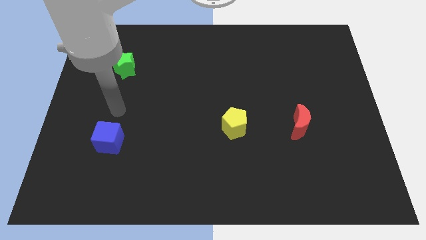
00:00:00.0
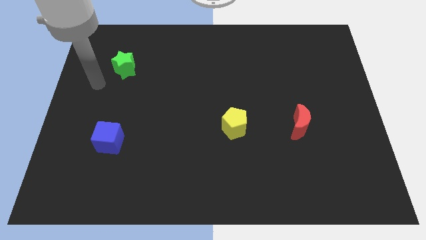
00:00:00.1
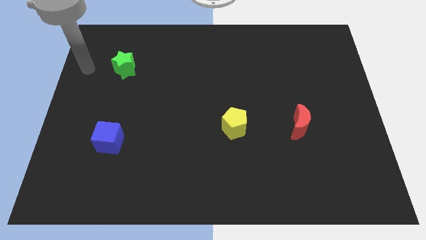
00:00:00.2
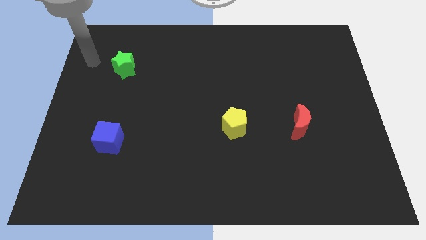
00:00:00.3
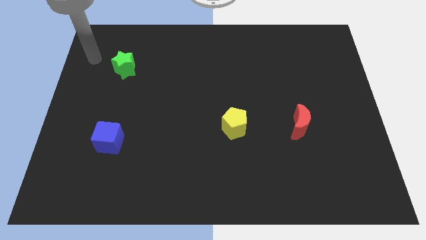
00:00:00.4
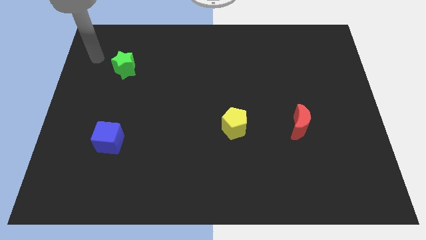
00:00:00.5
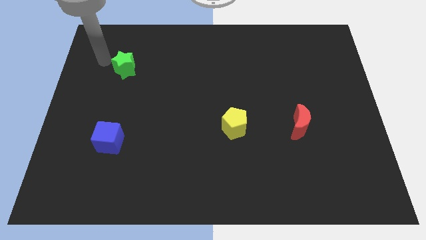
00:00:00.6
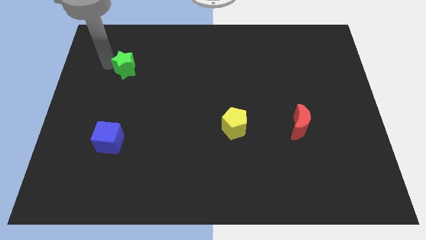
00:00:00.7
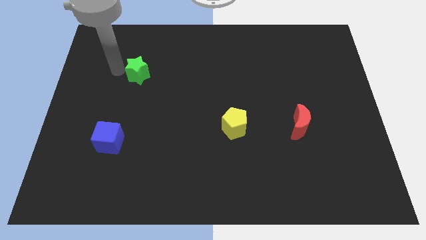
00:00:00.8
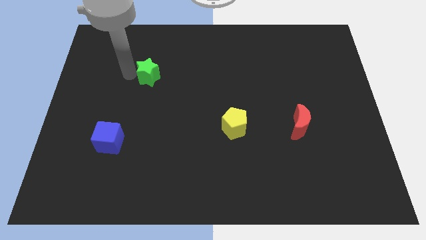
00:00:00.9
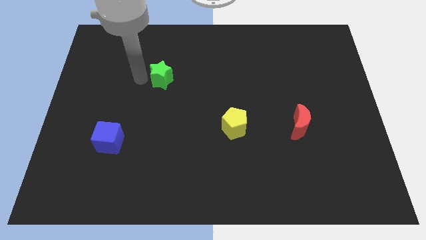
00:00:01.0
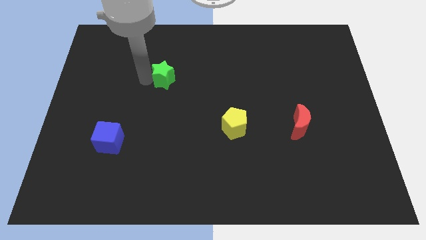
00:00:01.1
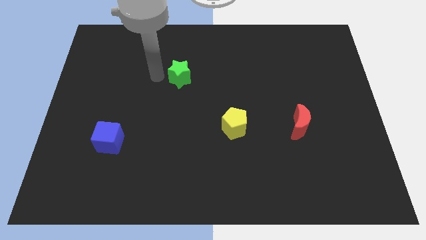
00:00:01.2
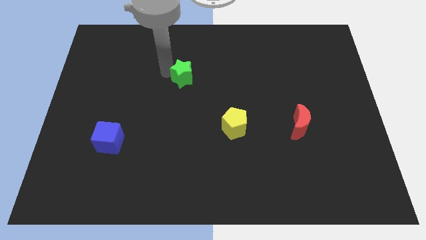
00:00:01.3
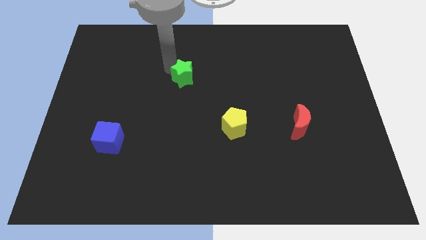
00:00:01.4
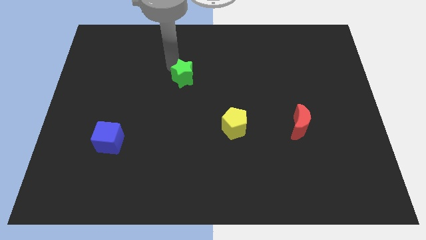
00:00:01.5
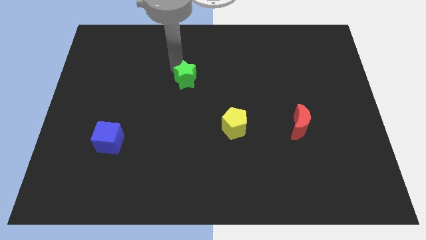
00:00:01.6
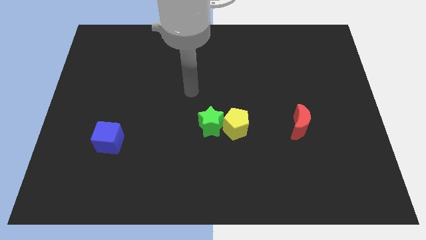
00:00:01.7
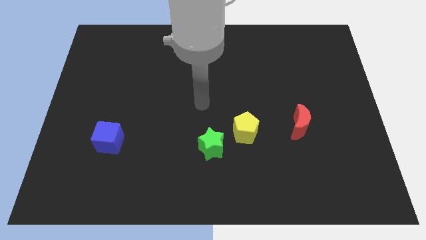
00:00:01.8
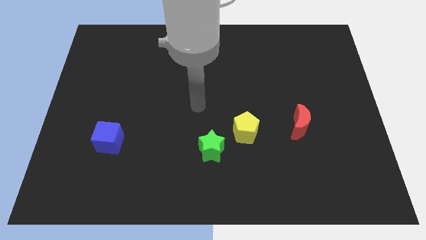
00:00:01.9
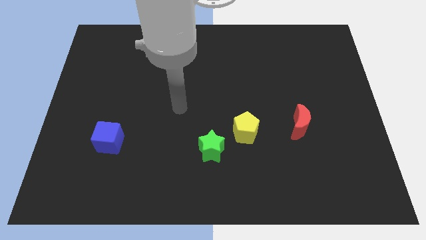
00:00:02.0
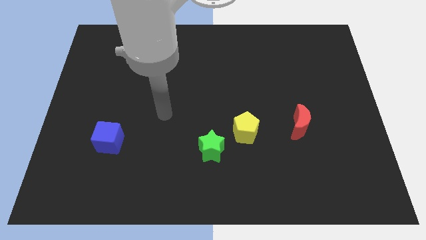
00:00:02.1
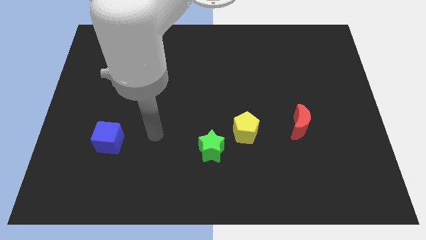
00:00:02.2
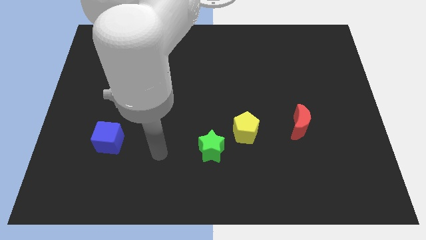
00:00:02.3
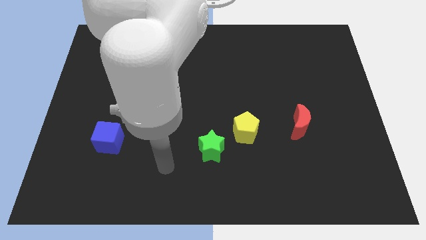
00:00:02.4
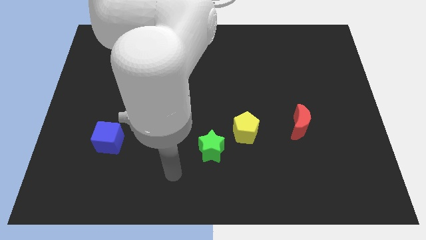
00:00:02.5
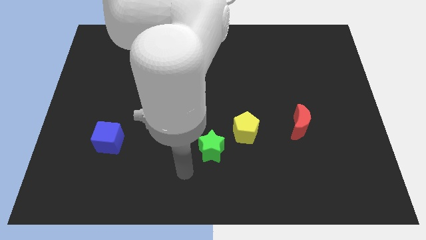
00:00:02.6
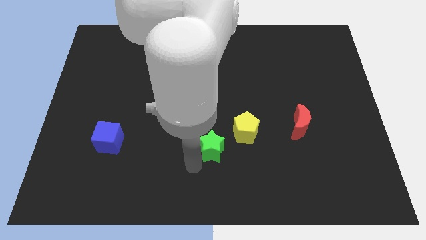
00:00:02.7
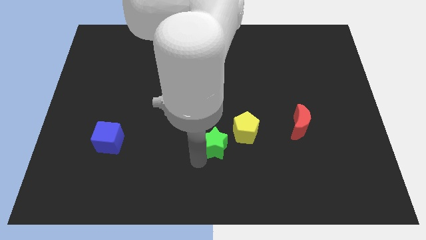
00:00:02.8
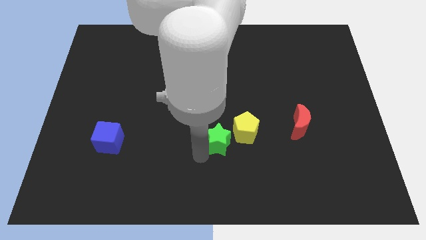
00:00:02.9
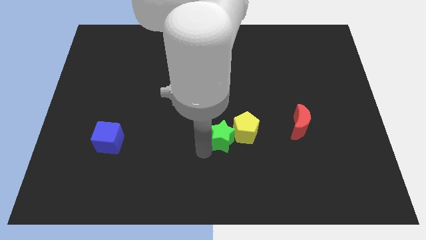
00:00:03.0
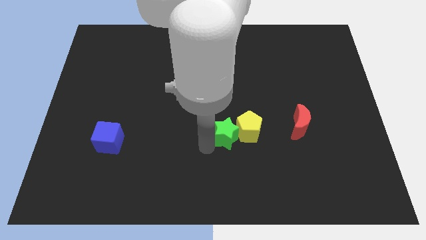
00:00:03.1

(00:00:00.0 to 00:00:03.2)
slide the star close to the yellow pentagon

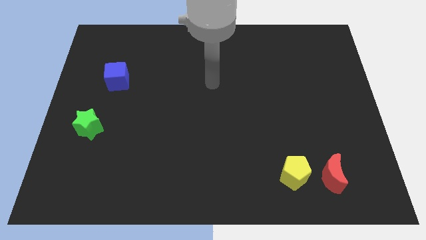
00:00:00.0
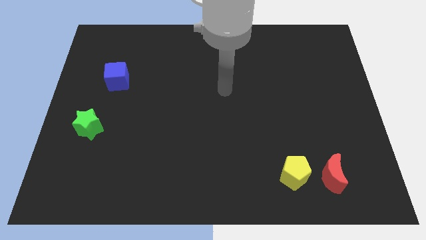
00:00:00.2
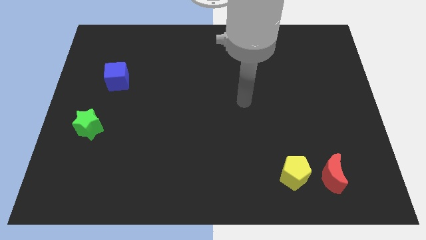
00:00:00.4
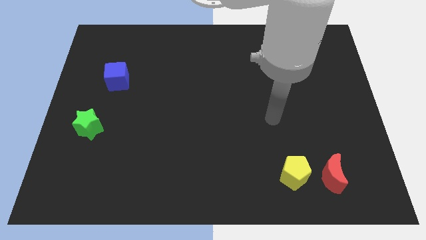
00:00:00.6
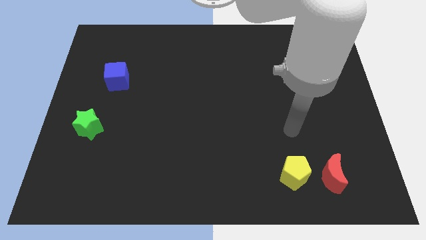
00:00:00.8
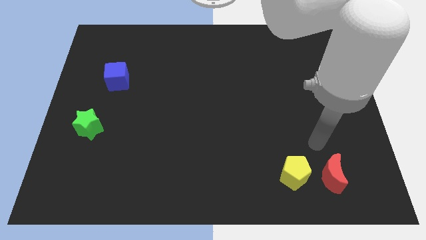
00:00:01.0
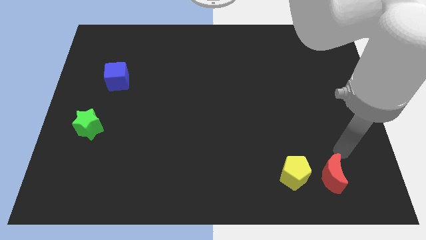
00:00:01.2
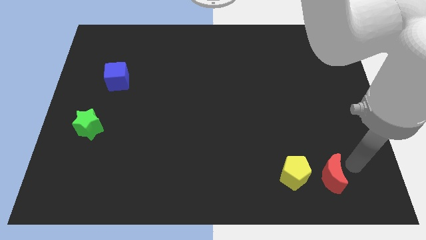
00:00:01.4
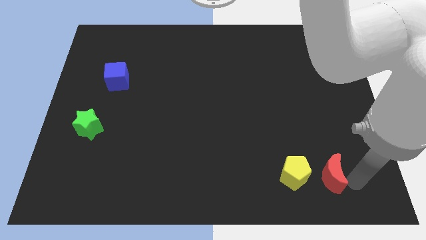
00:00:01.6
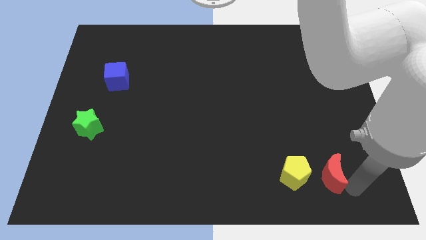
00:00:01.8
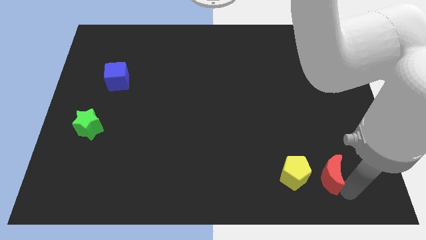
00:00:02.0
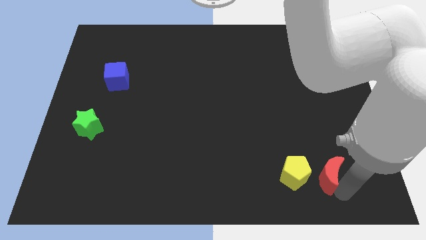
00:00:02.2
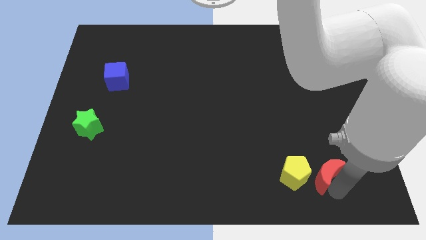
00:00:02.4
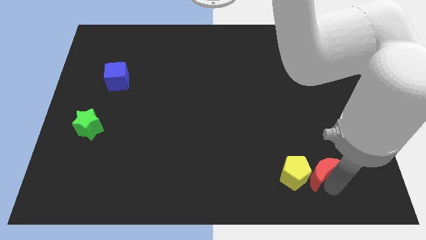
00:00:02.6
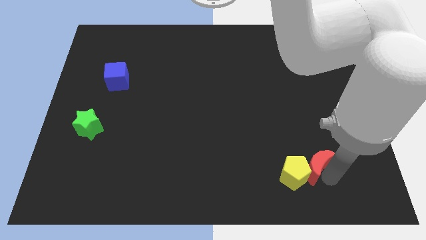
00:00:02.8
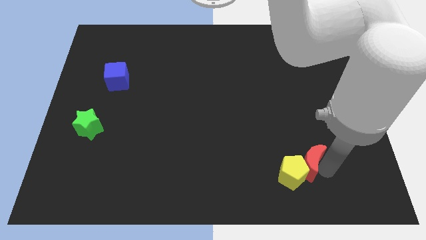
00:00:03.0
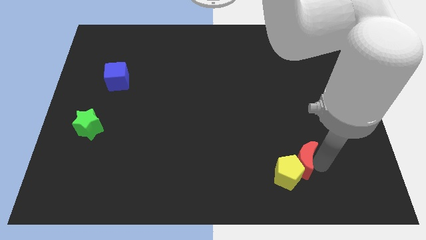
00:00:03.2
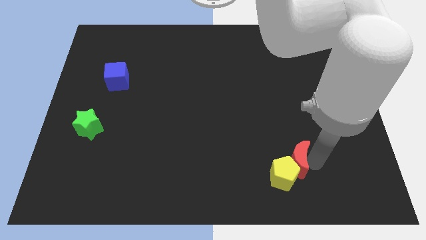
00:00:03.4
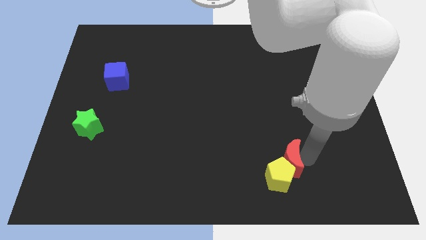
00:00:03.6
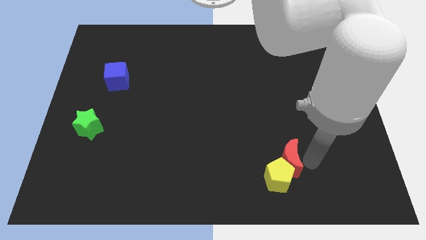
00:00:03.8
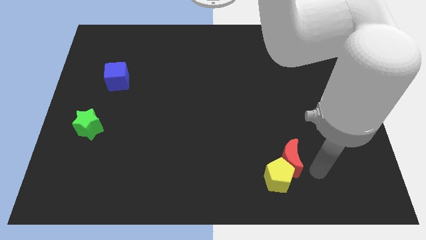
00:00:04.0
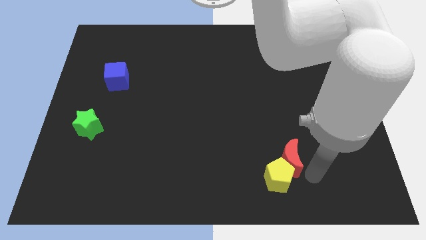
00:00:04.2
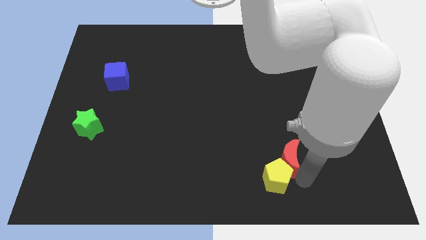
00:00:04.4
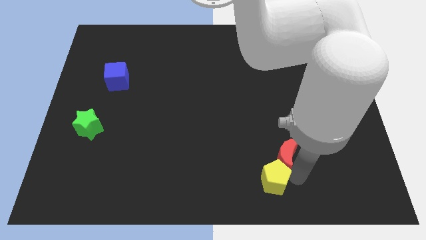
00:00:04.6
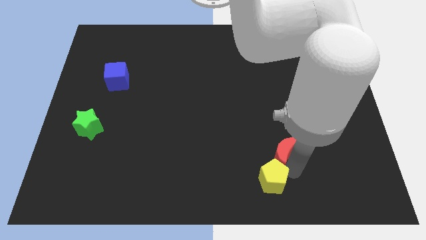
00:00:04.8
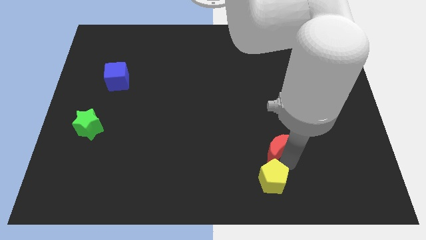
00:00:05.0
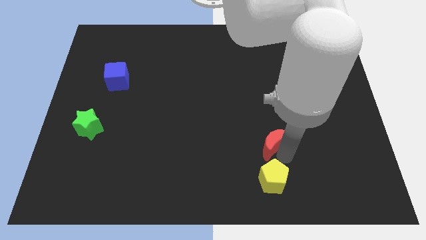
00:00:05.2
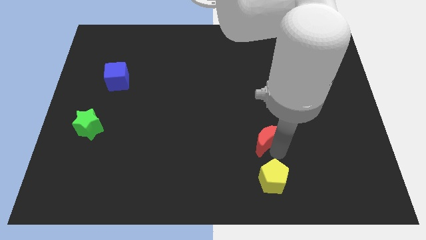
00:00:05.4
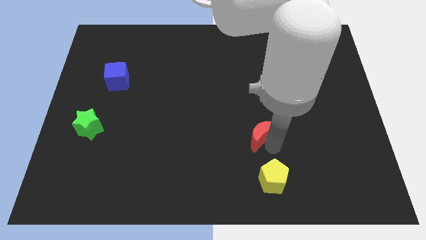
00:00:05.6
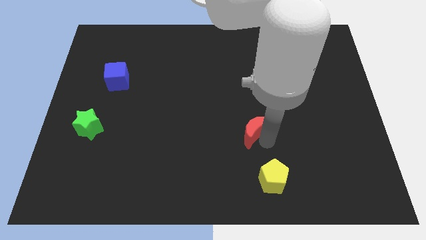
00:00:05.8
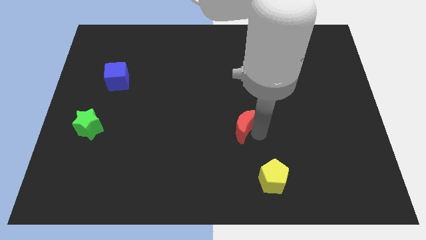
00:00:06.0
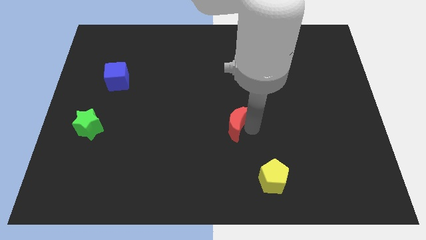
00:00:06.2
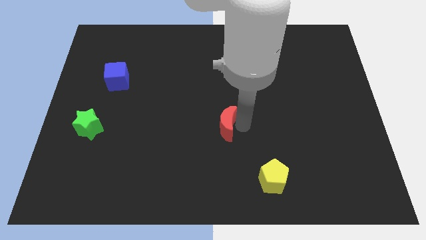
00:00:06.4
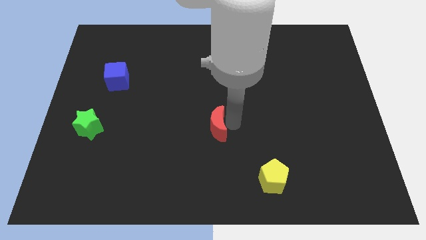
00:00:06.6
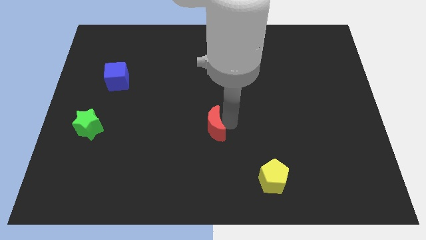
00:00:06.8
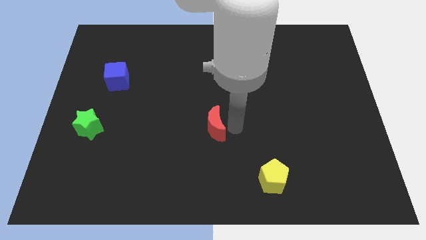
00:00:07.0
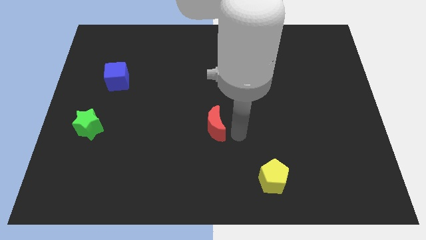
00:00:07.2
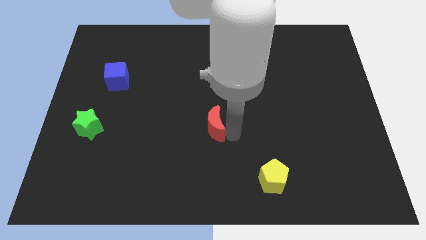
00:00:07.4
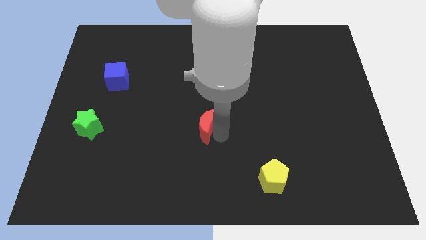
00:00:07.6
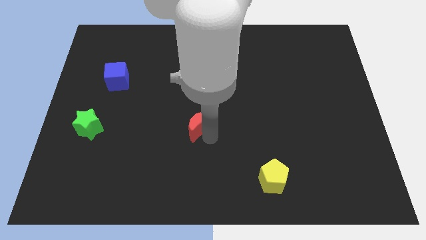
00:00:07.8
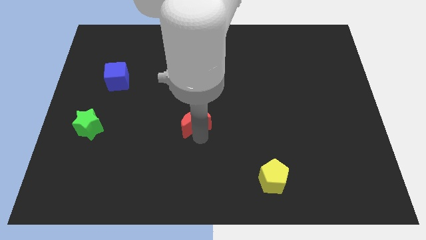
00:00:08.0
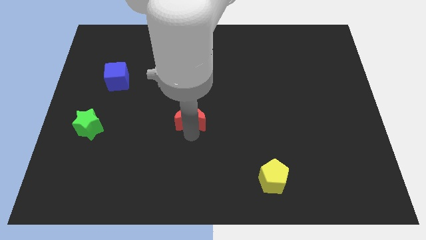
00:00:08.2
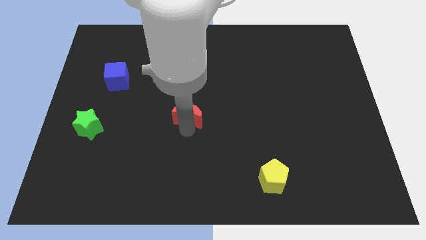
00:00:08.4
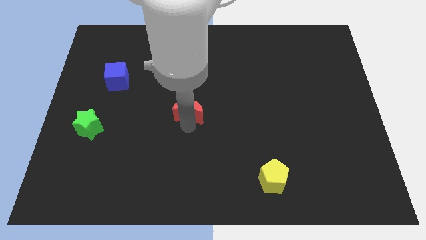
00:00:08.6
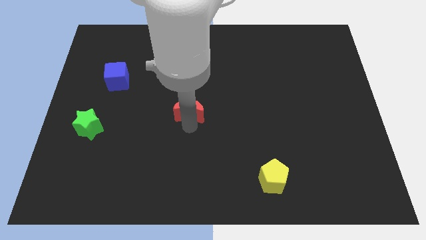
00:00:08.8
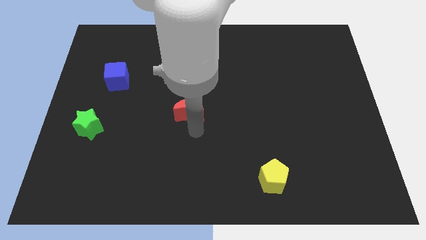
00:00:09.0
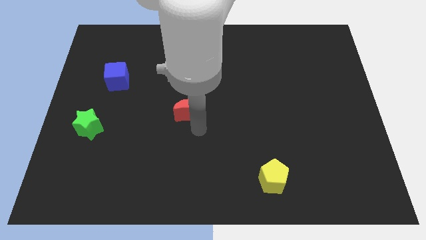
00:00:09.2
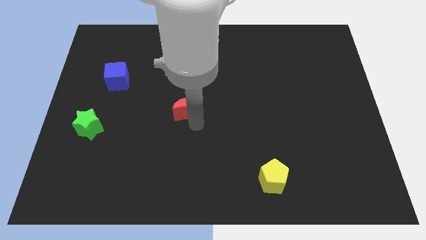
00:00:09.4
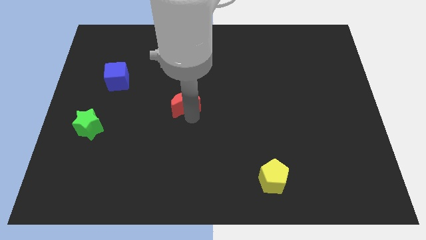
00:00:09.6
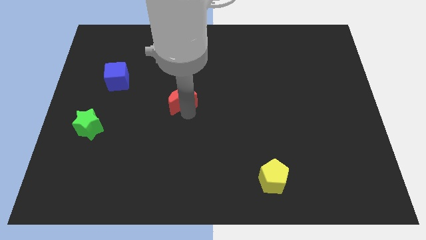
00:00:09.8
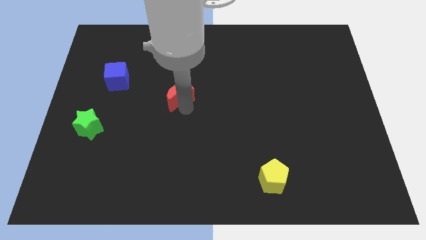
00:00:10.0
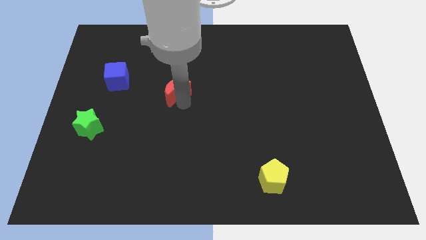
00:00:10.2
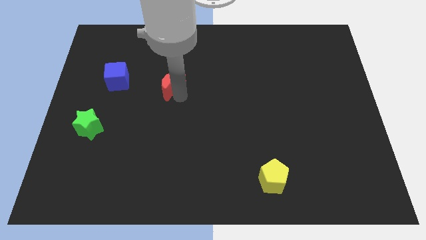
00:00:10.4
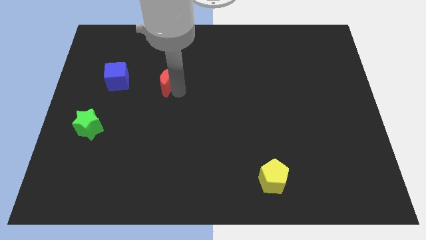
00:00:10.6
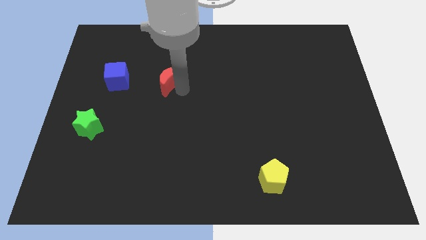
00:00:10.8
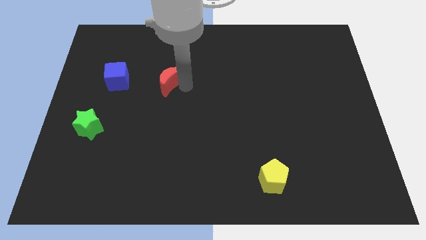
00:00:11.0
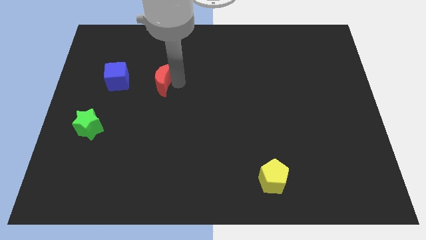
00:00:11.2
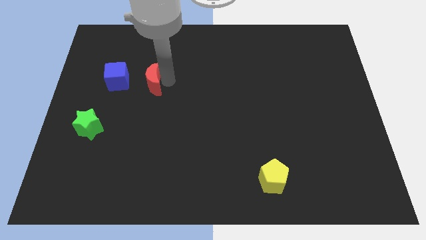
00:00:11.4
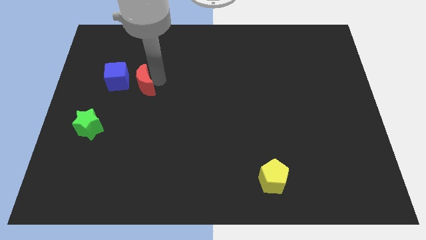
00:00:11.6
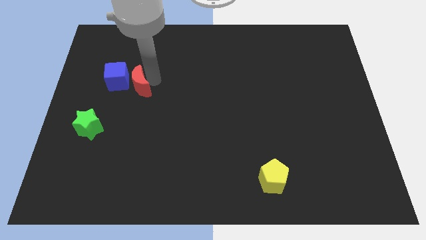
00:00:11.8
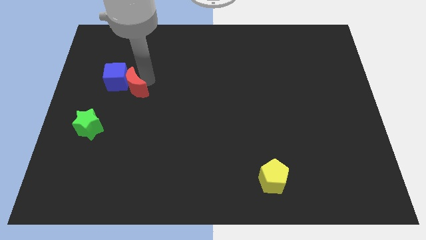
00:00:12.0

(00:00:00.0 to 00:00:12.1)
put the red moon towards the blue block
